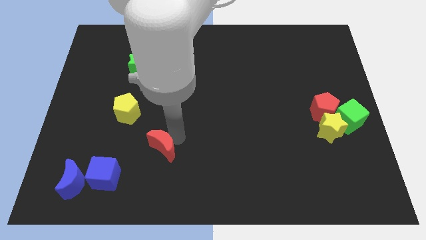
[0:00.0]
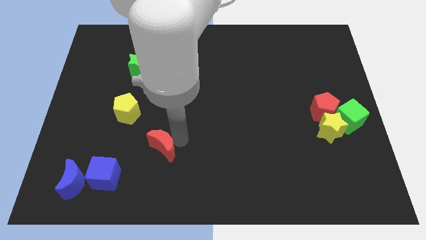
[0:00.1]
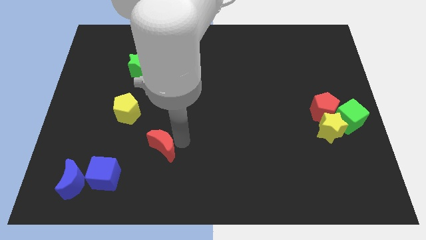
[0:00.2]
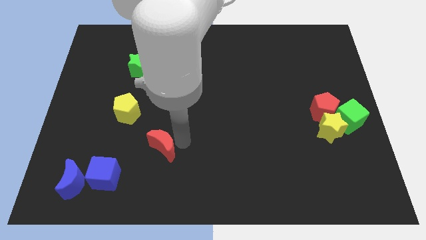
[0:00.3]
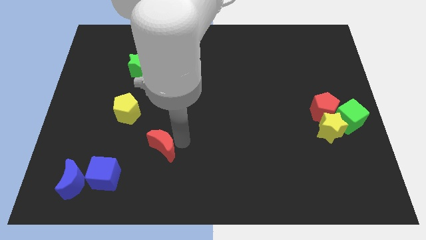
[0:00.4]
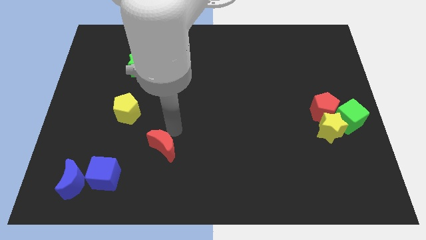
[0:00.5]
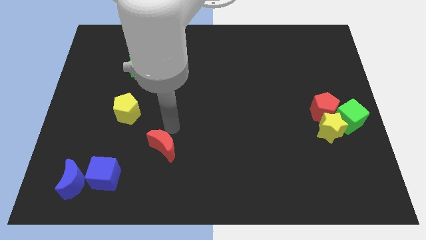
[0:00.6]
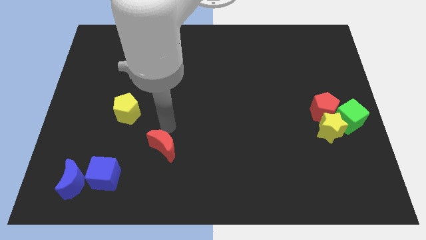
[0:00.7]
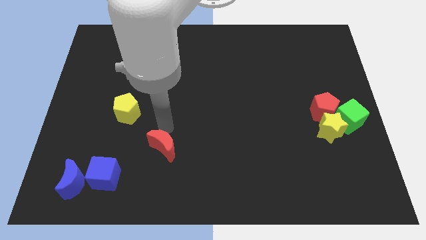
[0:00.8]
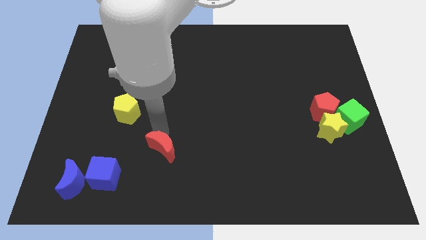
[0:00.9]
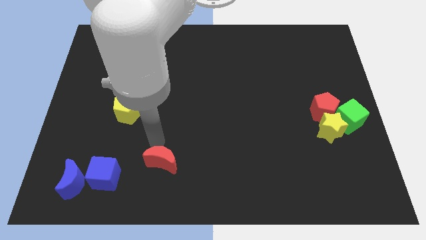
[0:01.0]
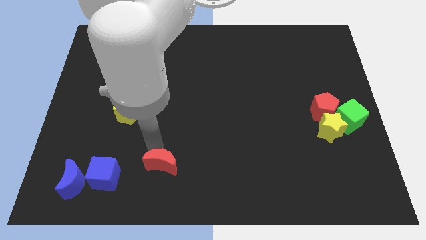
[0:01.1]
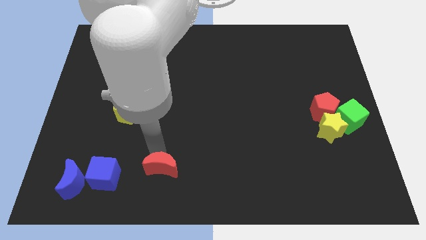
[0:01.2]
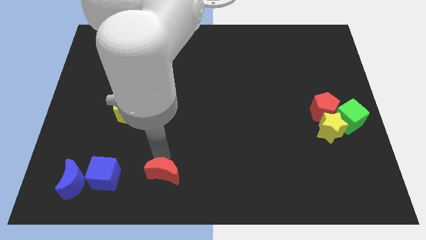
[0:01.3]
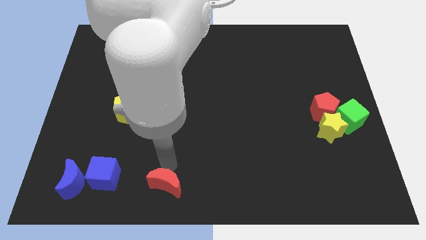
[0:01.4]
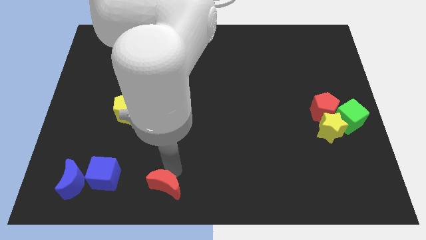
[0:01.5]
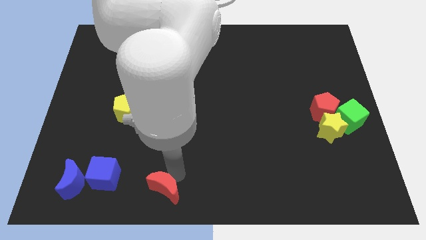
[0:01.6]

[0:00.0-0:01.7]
place red moon adjacent to blue blocks

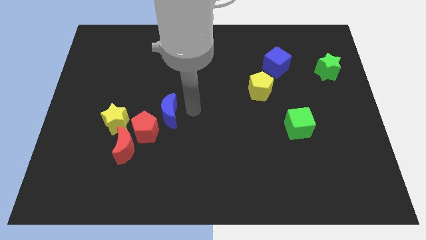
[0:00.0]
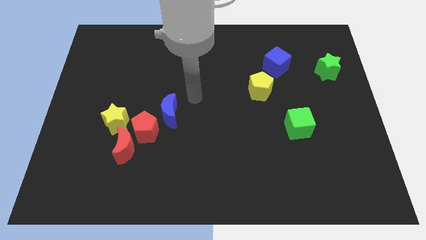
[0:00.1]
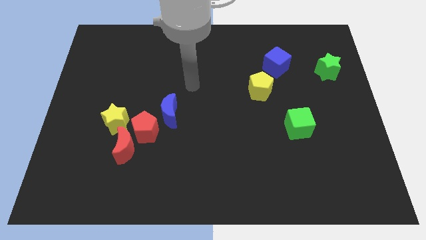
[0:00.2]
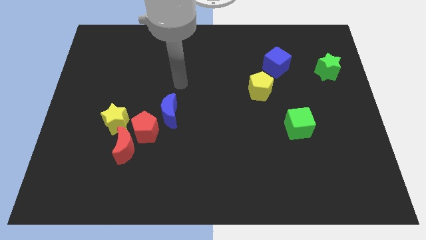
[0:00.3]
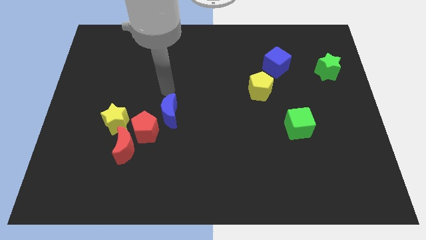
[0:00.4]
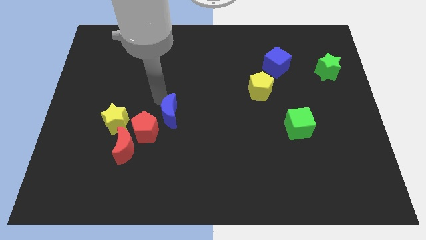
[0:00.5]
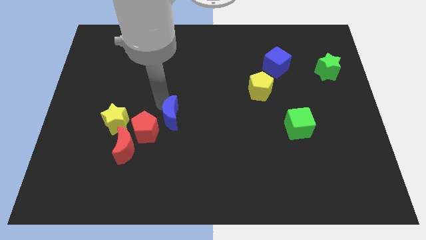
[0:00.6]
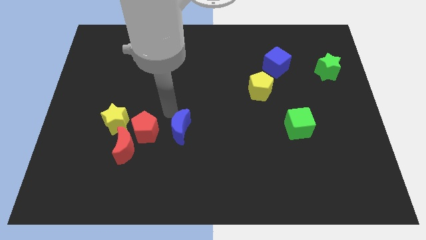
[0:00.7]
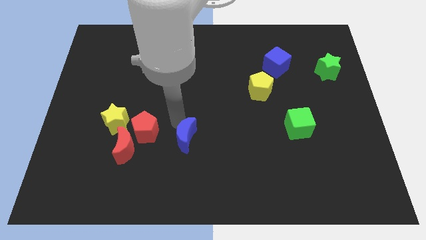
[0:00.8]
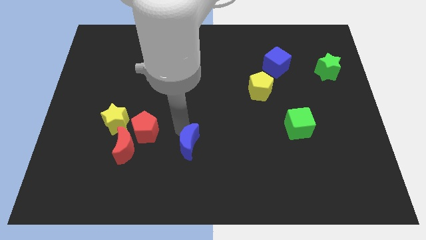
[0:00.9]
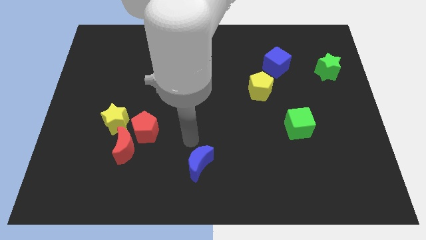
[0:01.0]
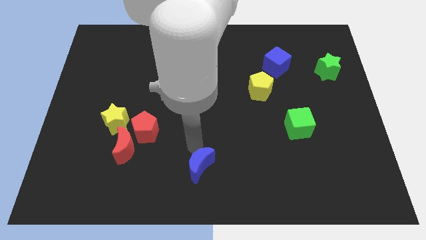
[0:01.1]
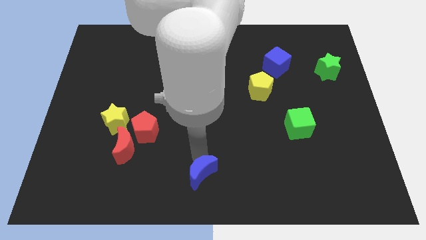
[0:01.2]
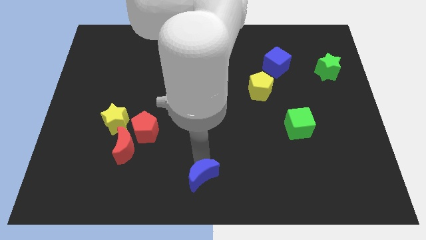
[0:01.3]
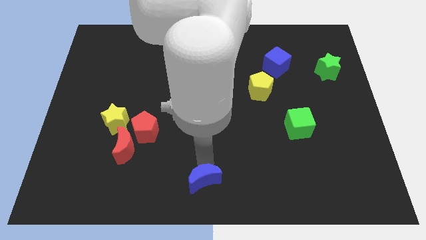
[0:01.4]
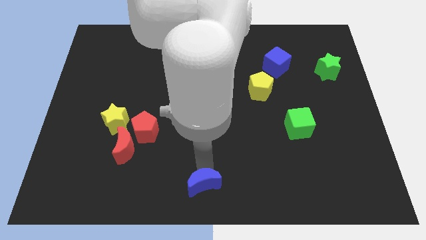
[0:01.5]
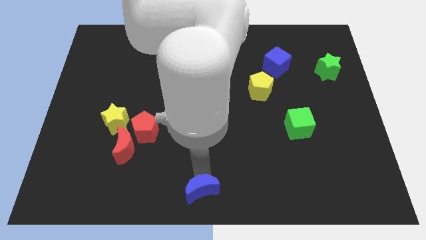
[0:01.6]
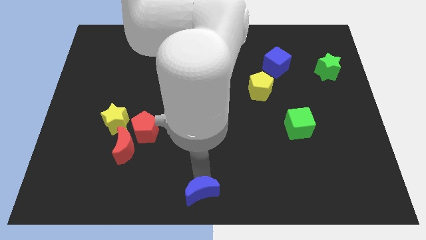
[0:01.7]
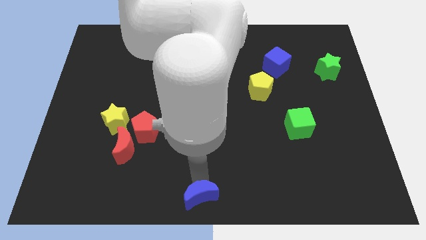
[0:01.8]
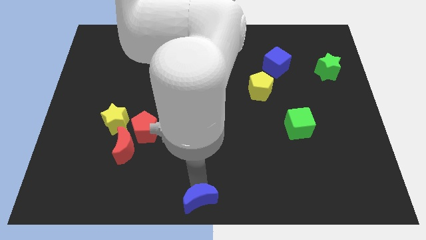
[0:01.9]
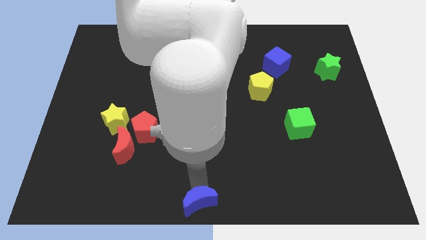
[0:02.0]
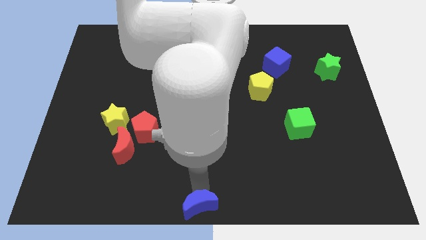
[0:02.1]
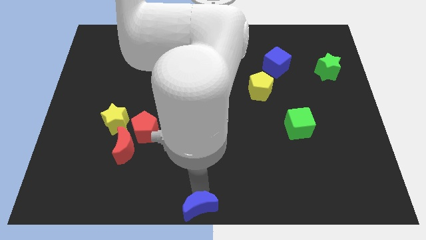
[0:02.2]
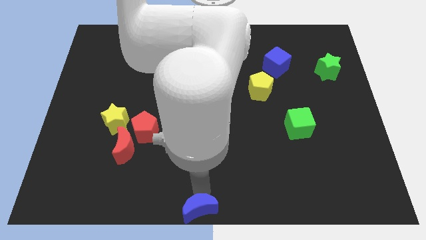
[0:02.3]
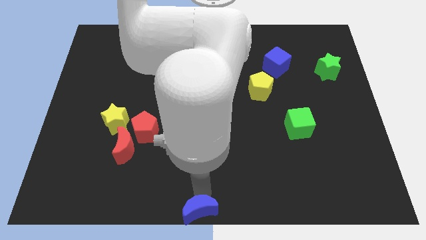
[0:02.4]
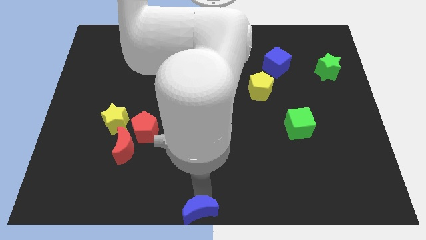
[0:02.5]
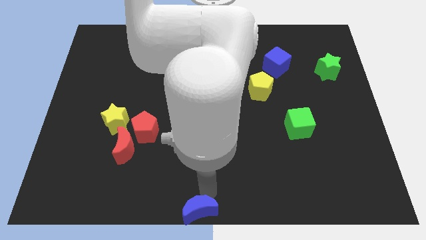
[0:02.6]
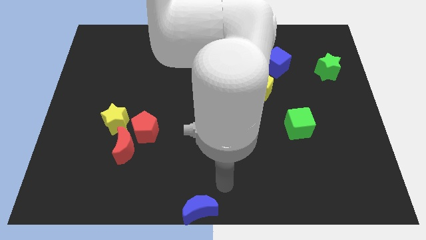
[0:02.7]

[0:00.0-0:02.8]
push the blue moon to the bottom center

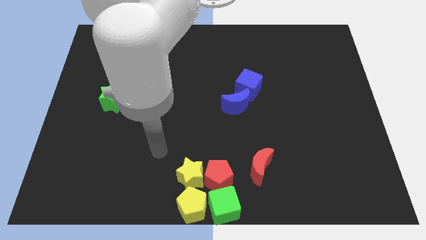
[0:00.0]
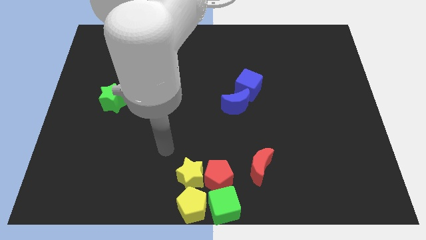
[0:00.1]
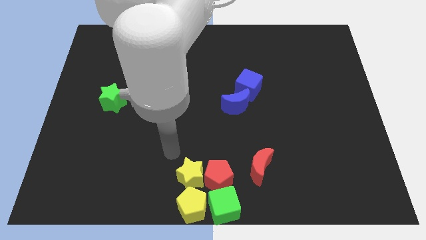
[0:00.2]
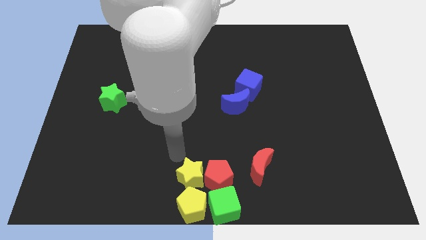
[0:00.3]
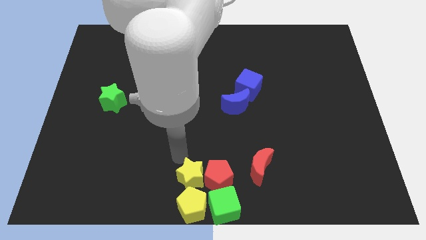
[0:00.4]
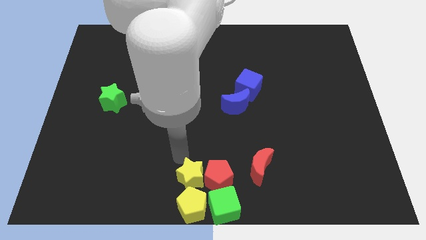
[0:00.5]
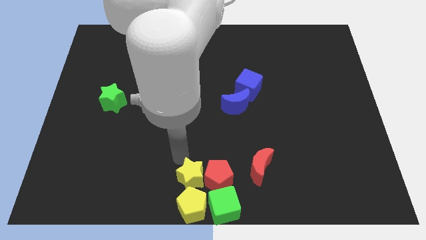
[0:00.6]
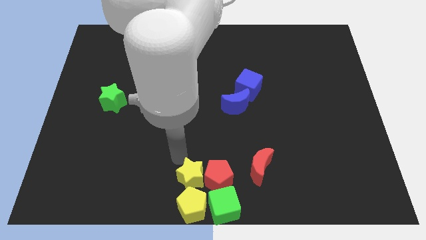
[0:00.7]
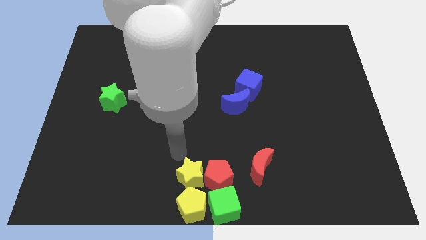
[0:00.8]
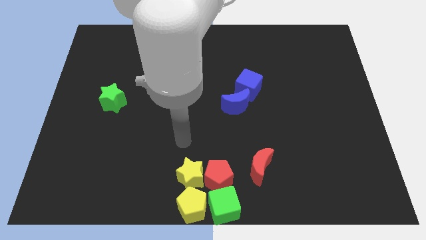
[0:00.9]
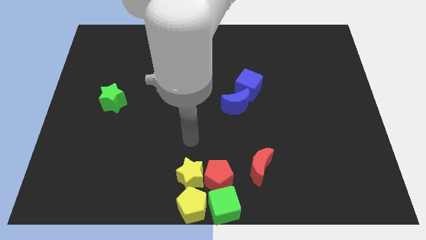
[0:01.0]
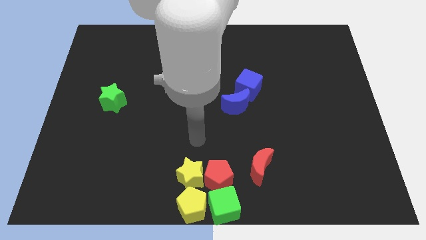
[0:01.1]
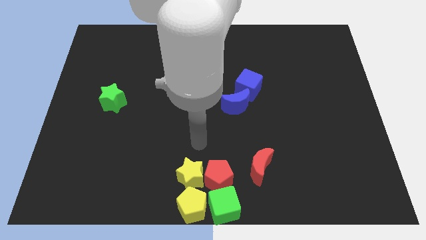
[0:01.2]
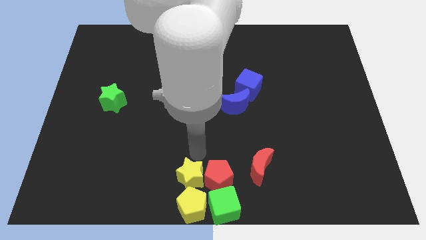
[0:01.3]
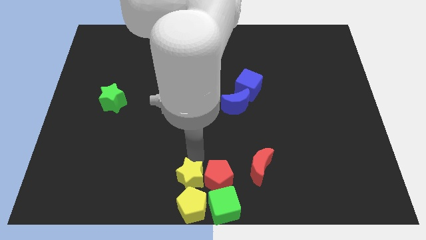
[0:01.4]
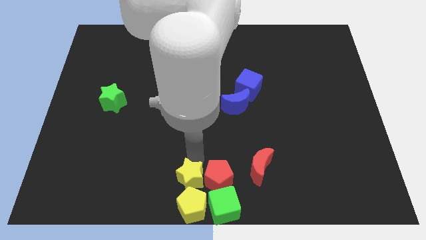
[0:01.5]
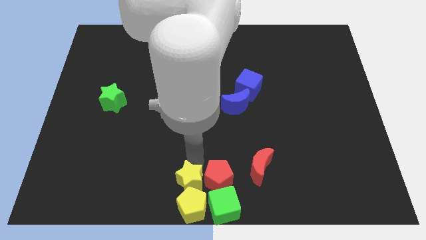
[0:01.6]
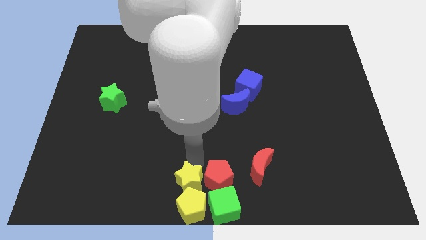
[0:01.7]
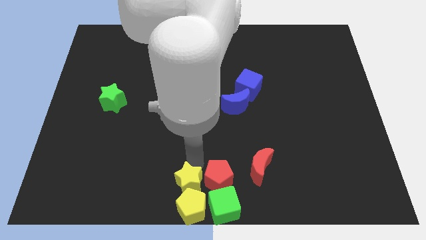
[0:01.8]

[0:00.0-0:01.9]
place arm on the top of yellow star

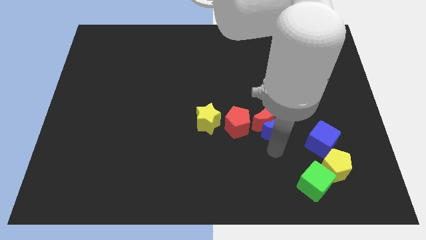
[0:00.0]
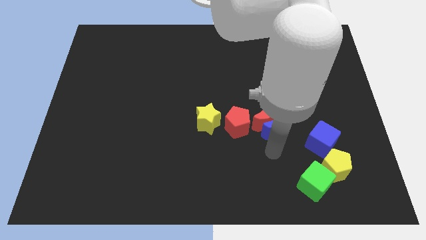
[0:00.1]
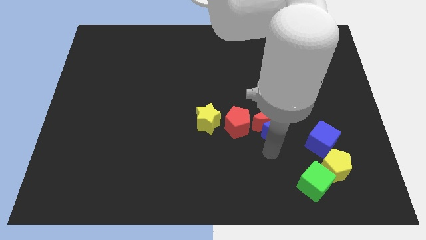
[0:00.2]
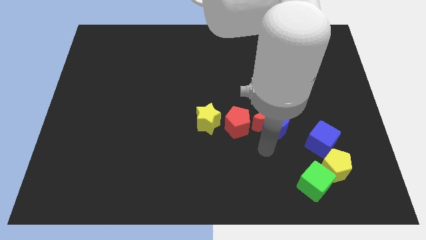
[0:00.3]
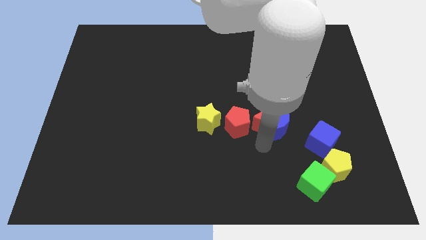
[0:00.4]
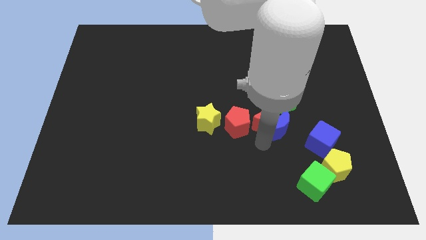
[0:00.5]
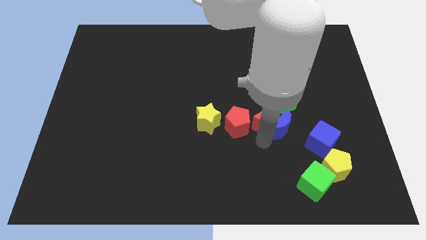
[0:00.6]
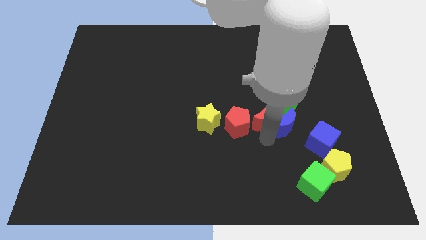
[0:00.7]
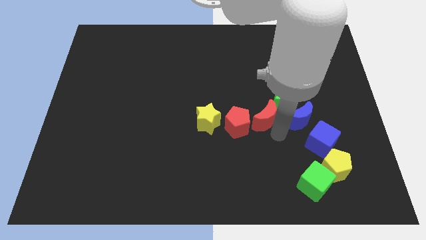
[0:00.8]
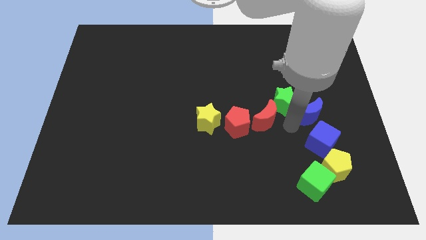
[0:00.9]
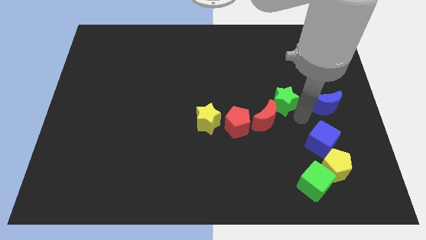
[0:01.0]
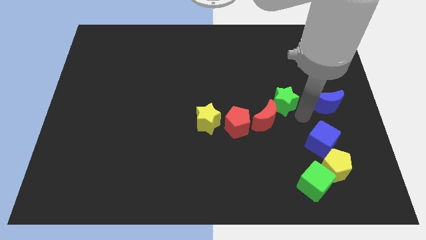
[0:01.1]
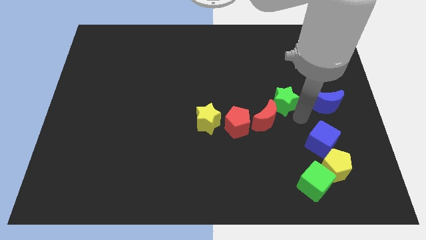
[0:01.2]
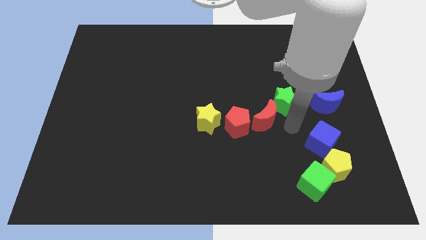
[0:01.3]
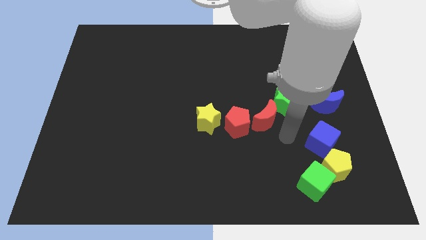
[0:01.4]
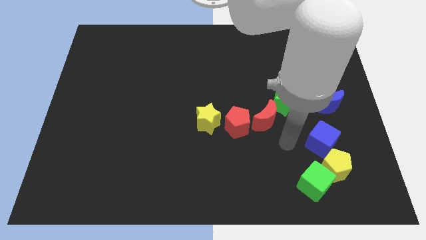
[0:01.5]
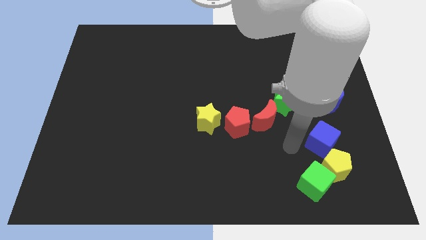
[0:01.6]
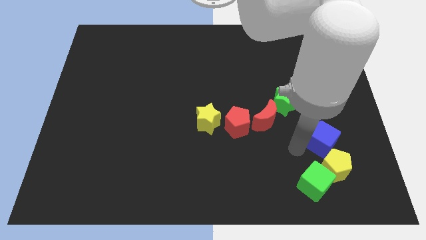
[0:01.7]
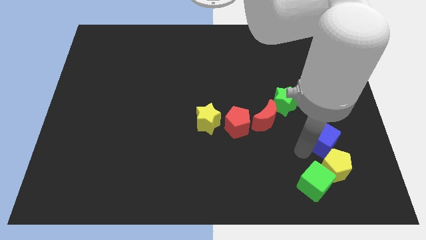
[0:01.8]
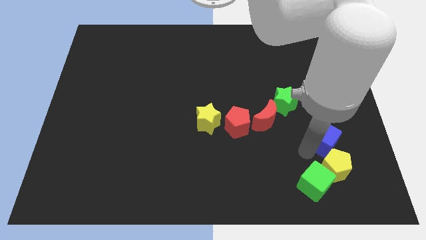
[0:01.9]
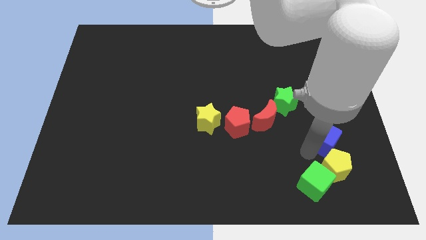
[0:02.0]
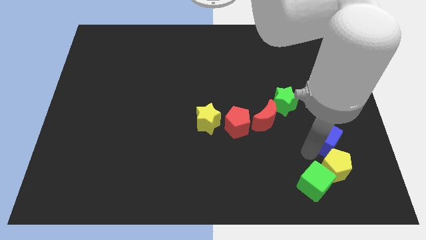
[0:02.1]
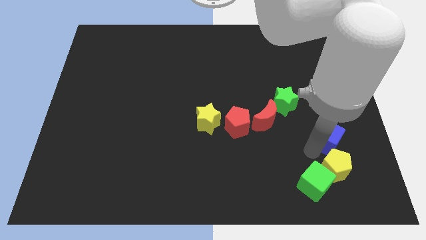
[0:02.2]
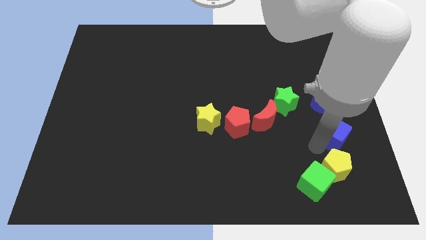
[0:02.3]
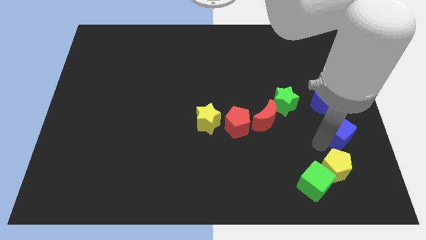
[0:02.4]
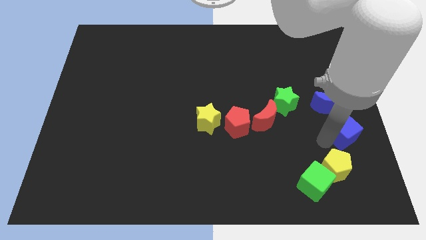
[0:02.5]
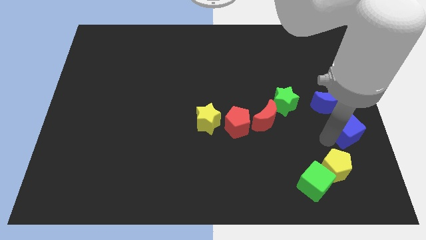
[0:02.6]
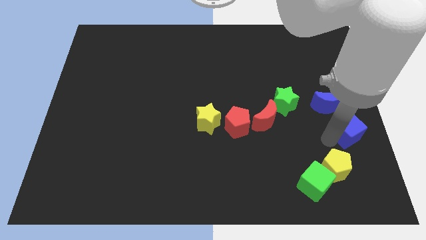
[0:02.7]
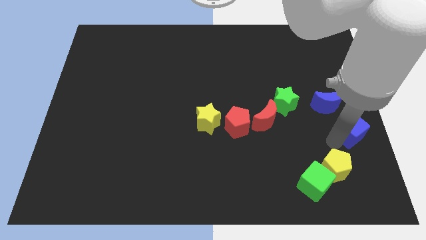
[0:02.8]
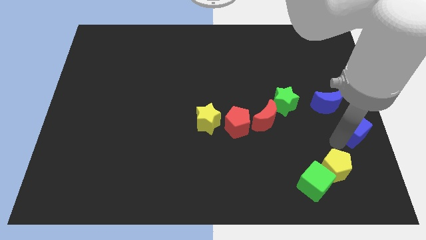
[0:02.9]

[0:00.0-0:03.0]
separate blue moon from red moon
